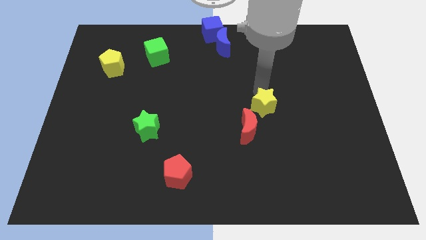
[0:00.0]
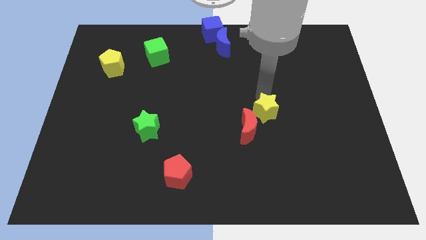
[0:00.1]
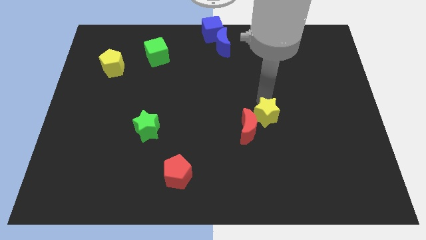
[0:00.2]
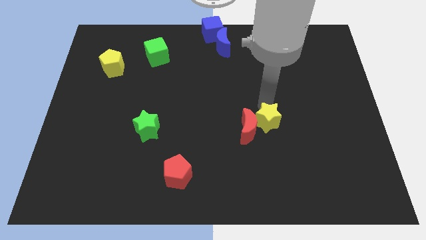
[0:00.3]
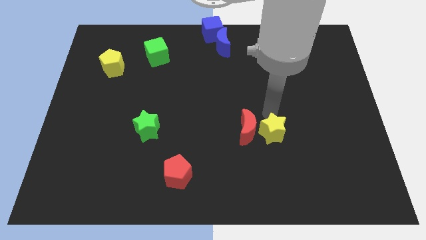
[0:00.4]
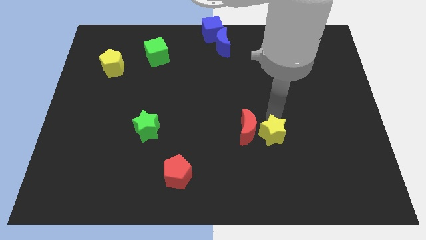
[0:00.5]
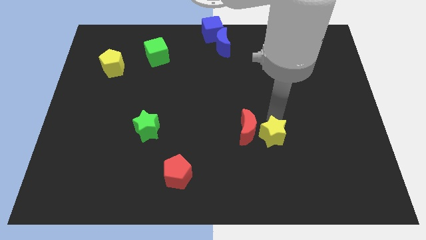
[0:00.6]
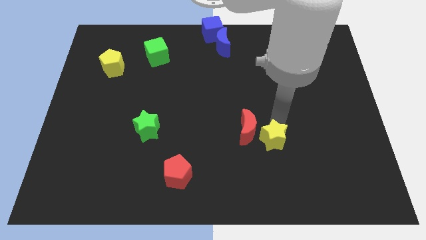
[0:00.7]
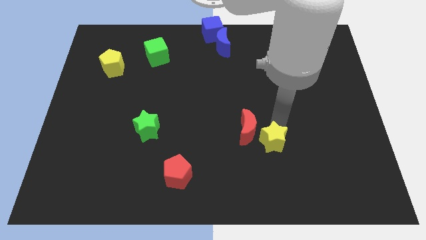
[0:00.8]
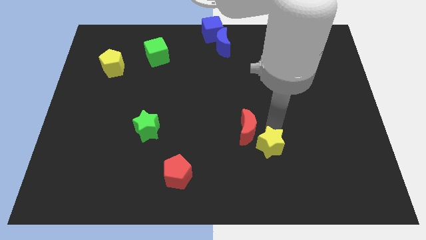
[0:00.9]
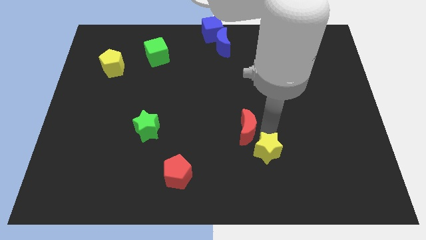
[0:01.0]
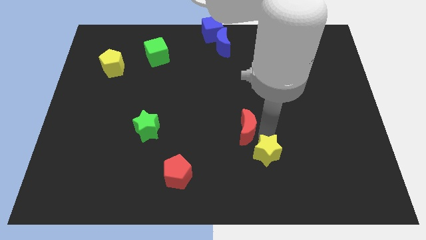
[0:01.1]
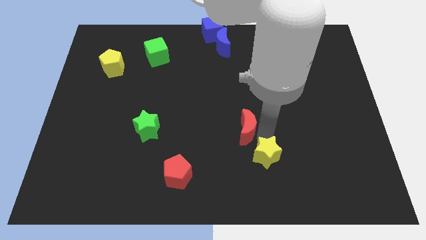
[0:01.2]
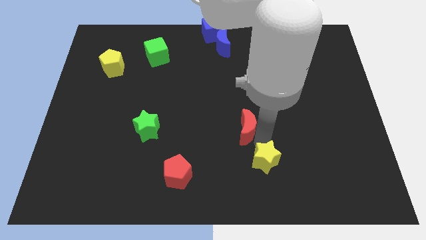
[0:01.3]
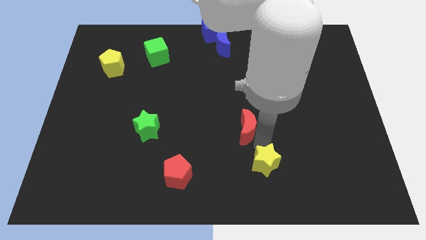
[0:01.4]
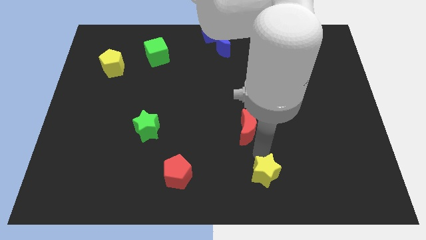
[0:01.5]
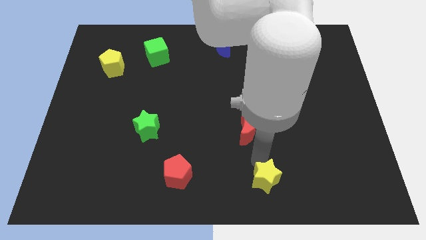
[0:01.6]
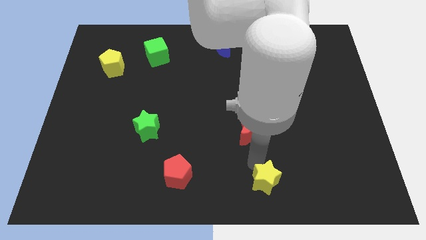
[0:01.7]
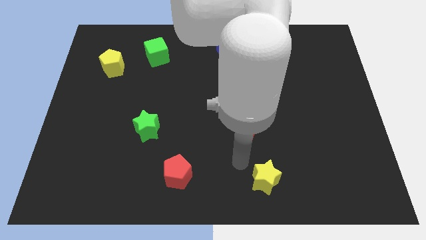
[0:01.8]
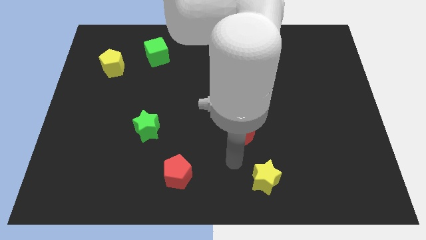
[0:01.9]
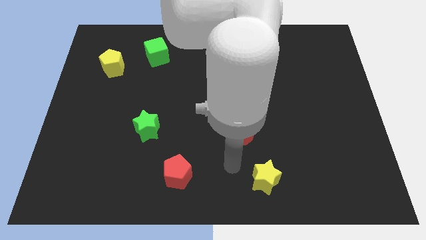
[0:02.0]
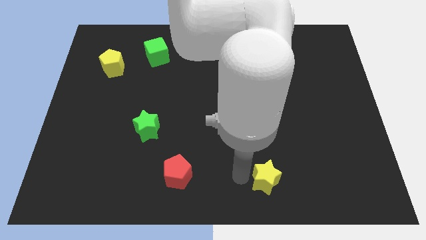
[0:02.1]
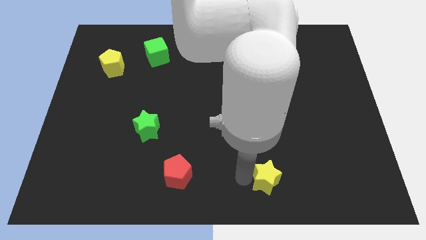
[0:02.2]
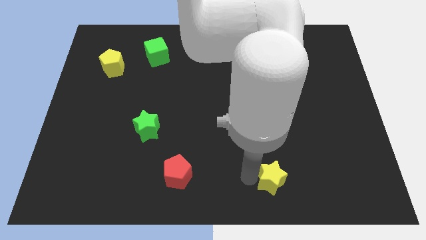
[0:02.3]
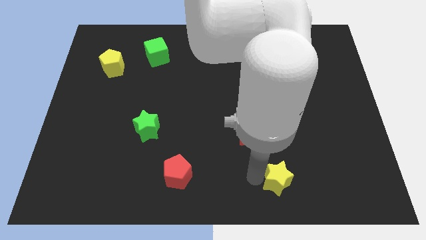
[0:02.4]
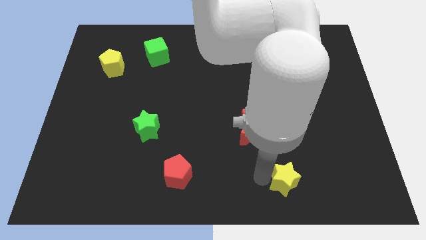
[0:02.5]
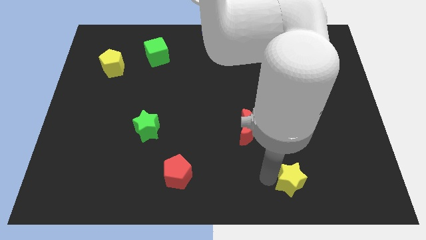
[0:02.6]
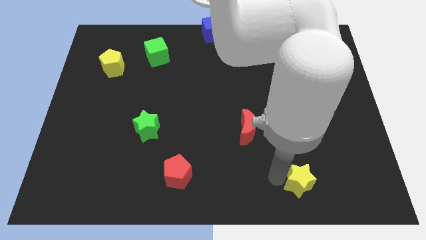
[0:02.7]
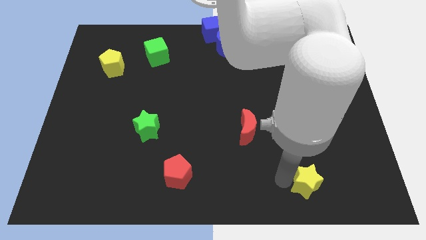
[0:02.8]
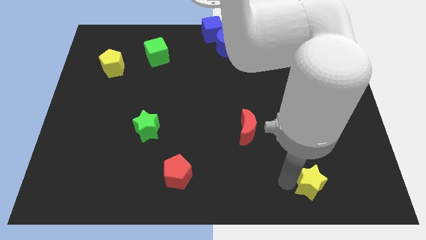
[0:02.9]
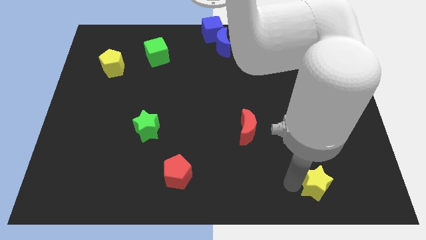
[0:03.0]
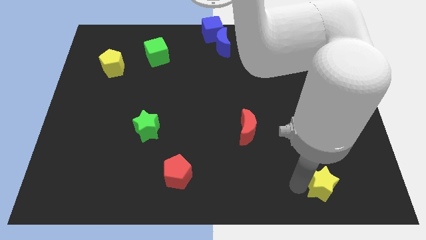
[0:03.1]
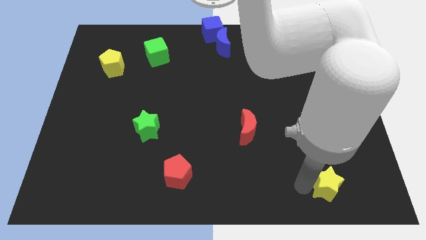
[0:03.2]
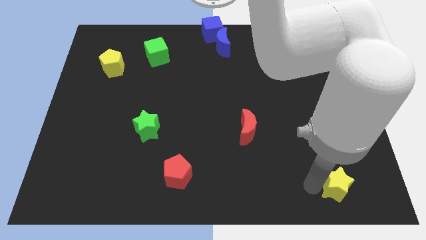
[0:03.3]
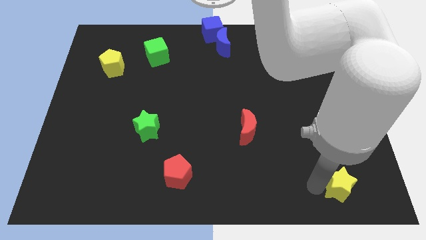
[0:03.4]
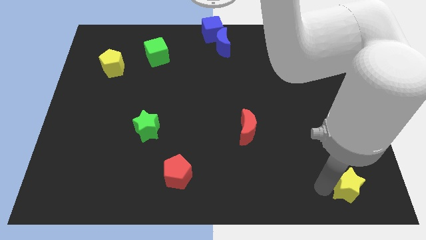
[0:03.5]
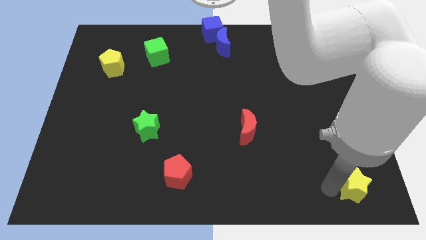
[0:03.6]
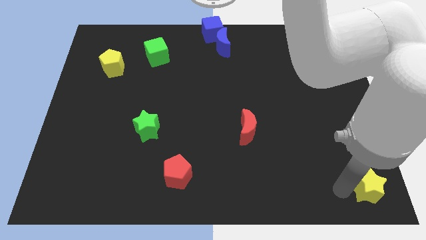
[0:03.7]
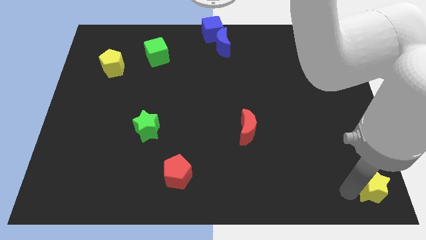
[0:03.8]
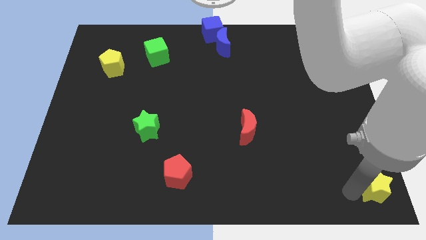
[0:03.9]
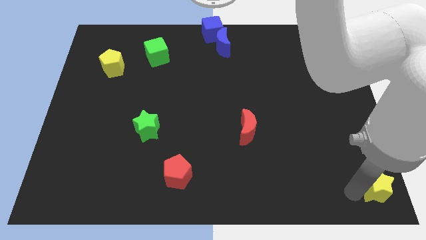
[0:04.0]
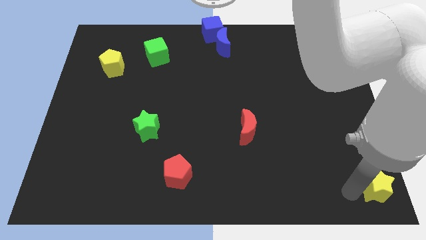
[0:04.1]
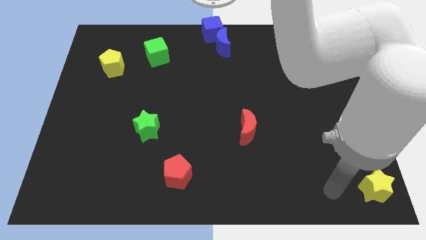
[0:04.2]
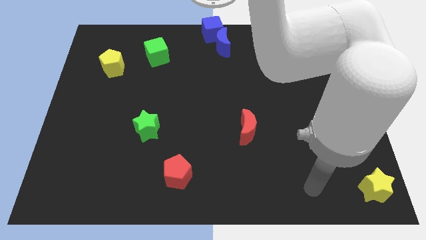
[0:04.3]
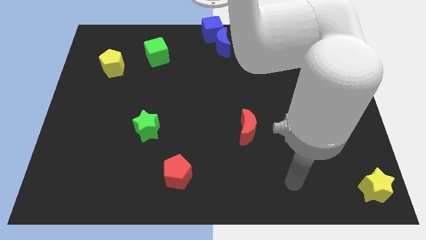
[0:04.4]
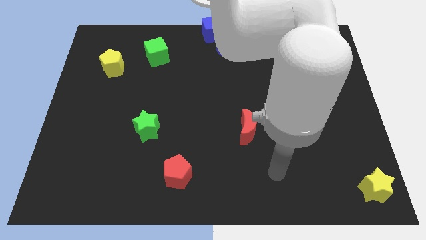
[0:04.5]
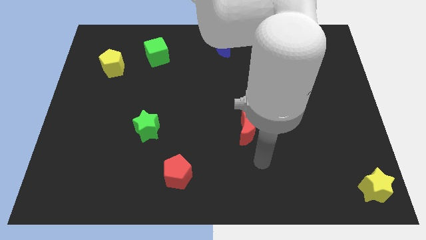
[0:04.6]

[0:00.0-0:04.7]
move the yellow block to the bottom right corner

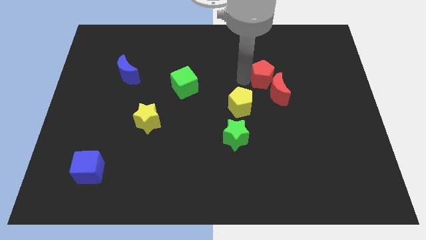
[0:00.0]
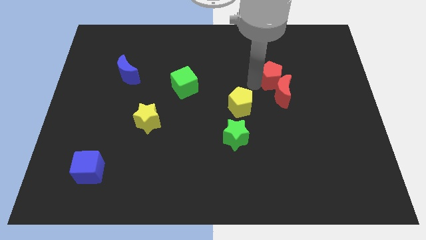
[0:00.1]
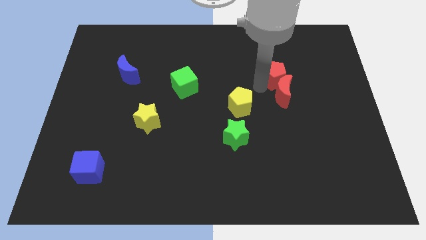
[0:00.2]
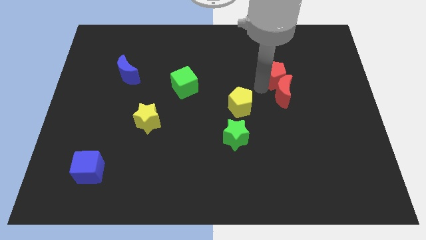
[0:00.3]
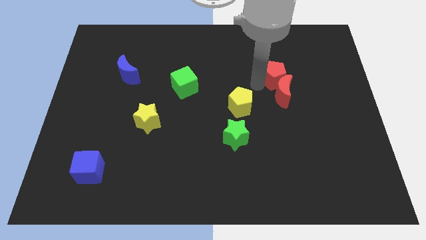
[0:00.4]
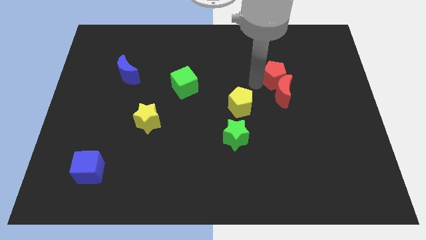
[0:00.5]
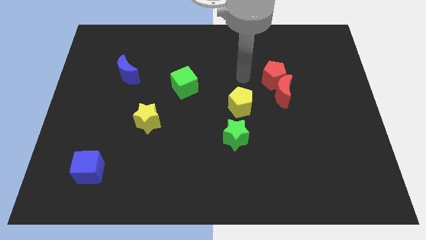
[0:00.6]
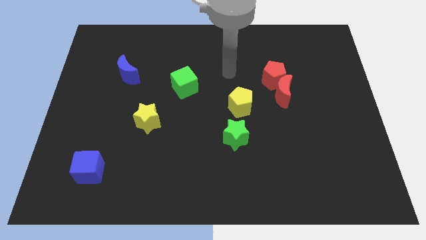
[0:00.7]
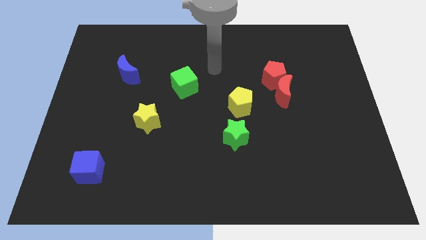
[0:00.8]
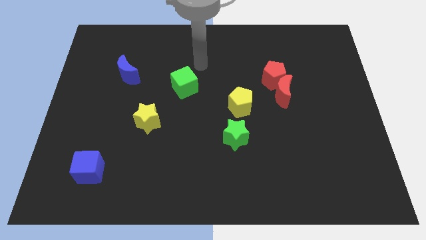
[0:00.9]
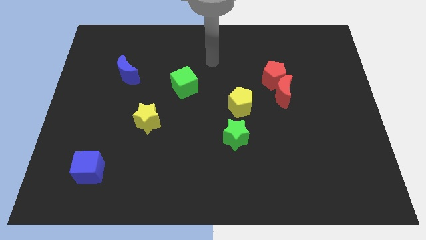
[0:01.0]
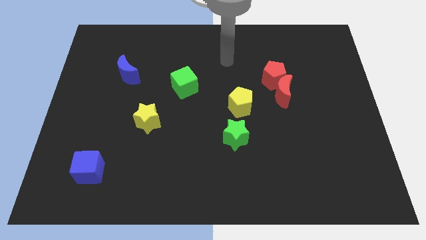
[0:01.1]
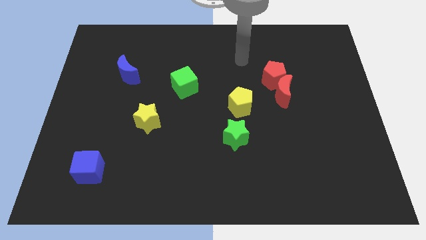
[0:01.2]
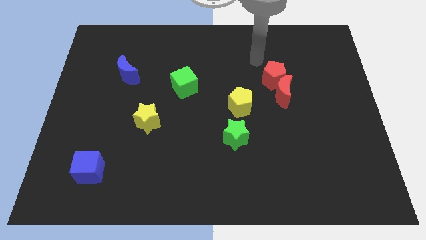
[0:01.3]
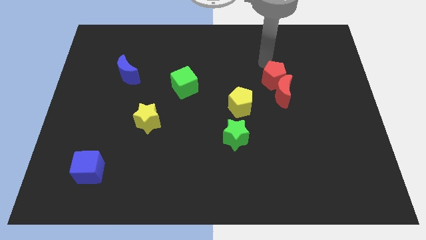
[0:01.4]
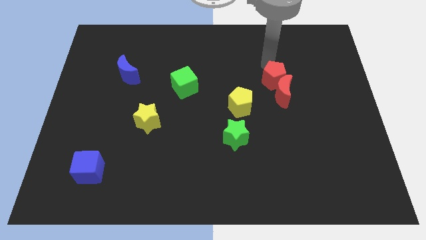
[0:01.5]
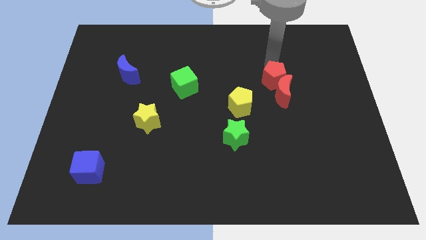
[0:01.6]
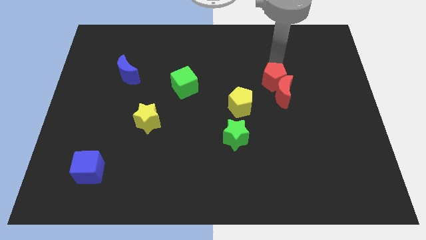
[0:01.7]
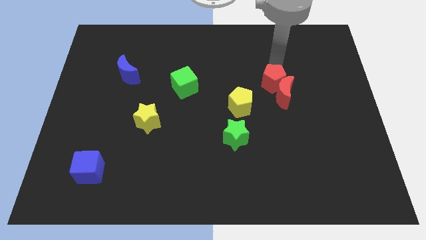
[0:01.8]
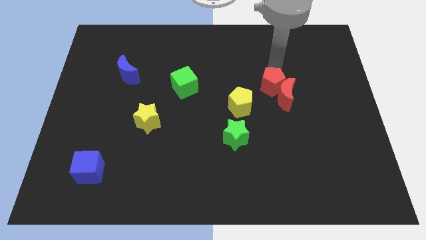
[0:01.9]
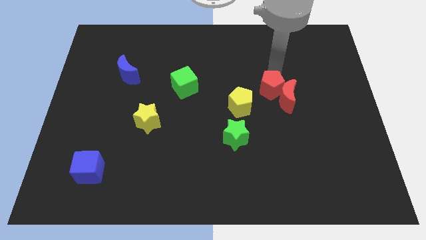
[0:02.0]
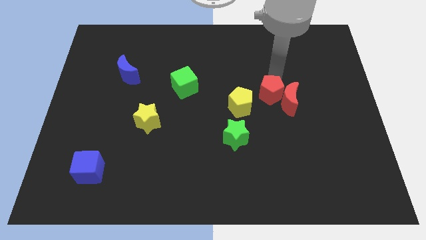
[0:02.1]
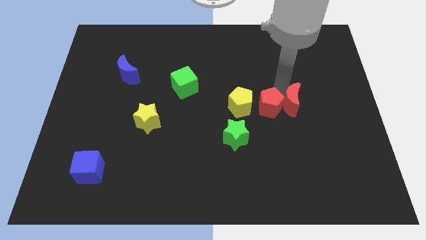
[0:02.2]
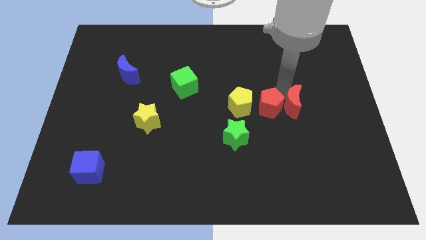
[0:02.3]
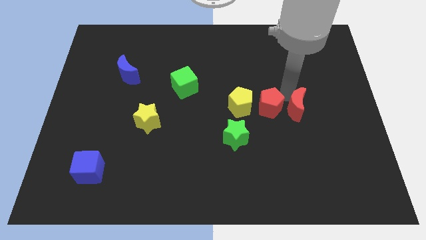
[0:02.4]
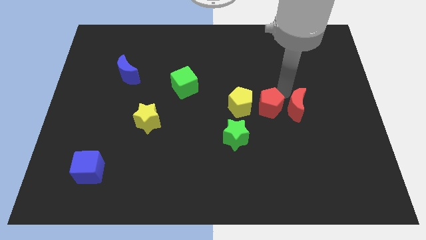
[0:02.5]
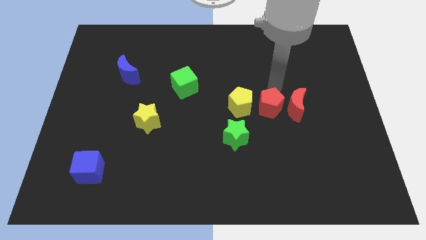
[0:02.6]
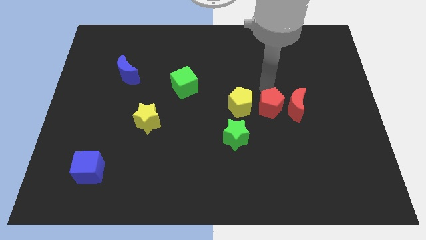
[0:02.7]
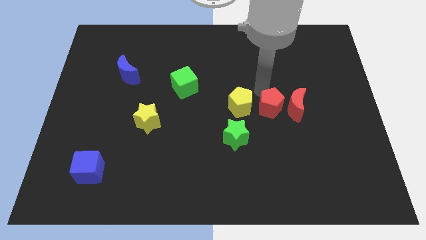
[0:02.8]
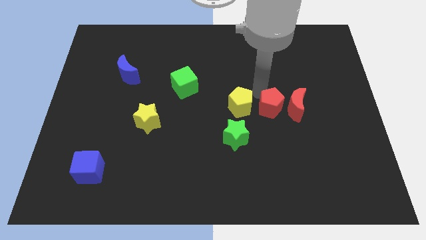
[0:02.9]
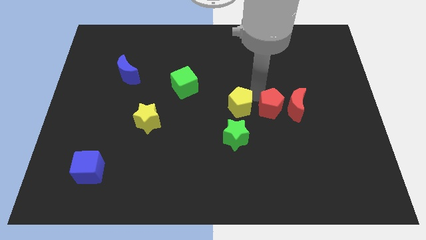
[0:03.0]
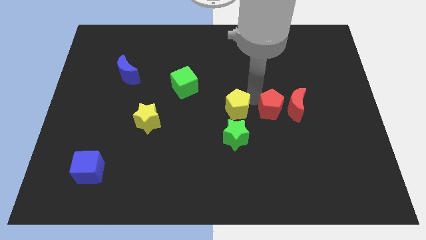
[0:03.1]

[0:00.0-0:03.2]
place the red blocks right to the yellow pentagon

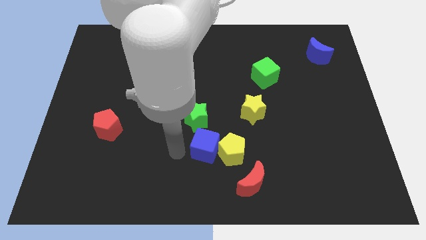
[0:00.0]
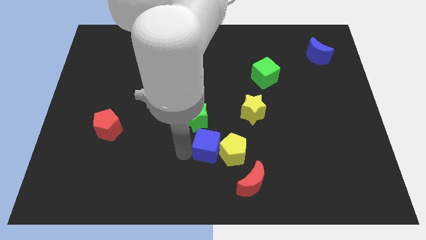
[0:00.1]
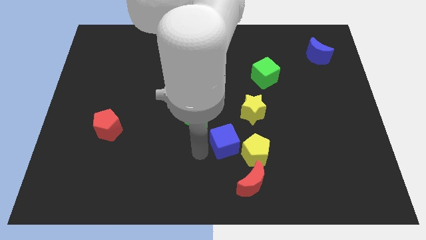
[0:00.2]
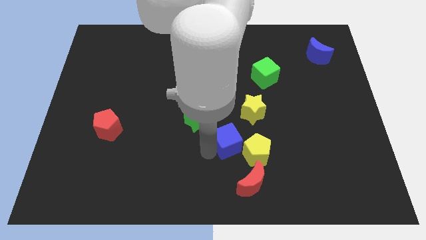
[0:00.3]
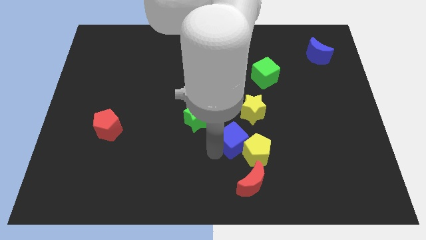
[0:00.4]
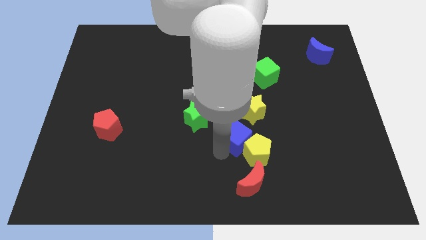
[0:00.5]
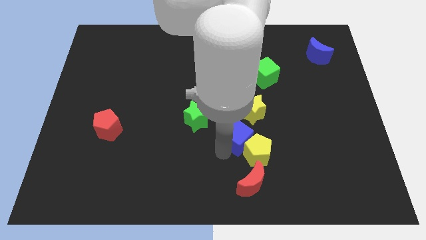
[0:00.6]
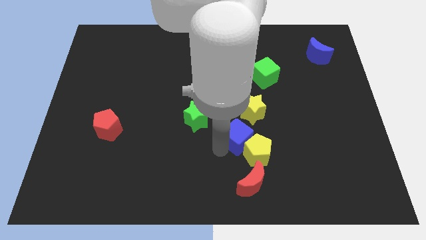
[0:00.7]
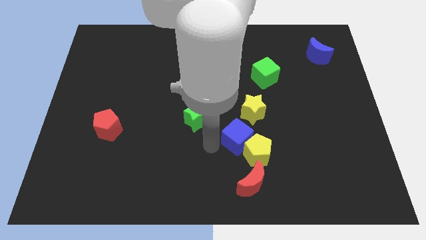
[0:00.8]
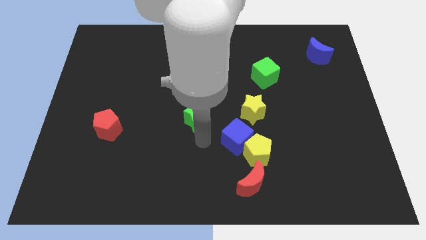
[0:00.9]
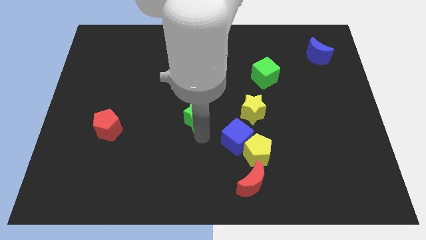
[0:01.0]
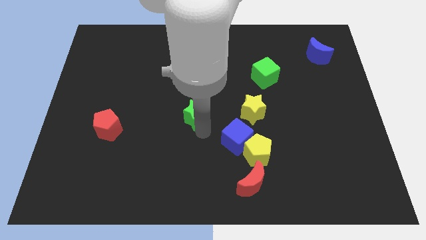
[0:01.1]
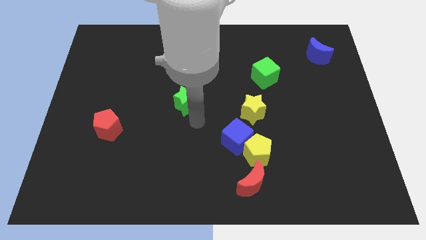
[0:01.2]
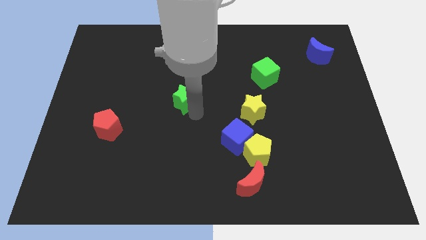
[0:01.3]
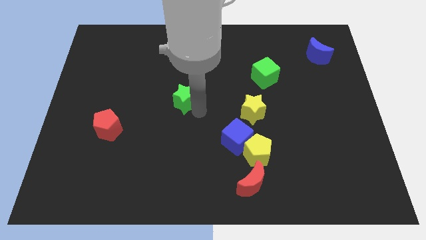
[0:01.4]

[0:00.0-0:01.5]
move green star upwards
